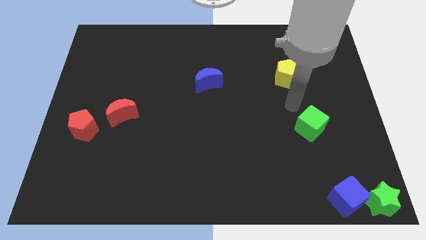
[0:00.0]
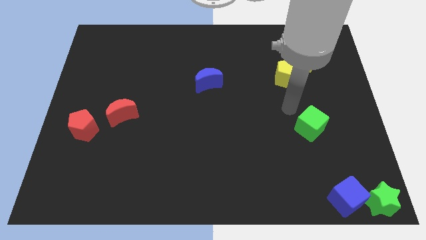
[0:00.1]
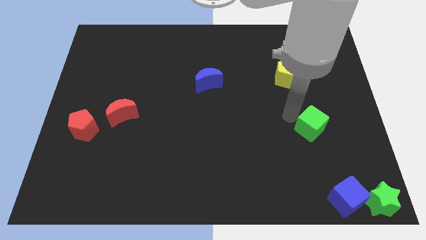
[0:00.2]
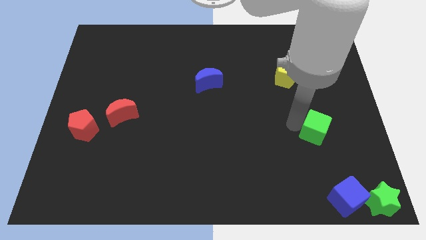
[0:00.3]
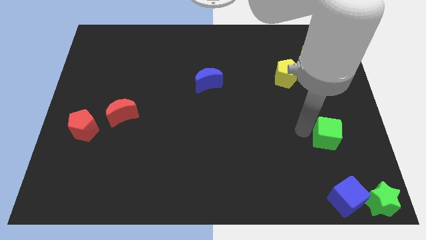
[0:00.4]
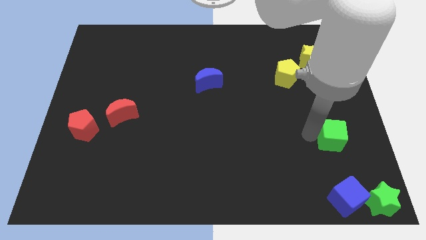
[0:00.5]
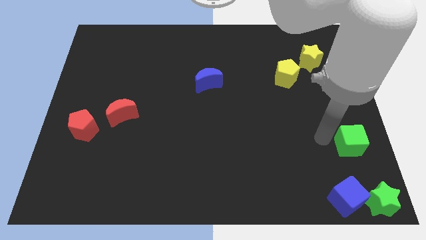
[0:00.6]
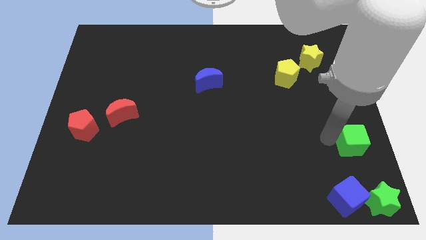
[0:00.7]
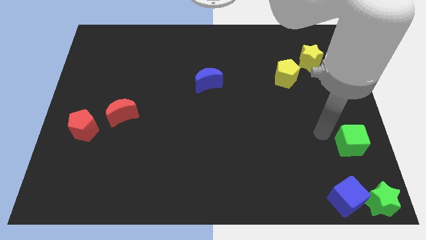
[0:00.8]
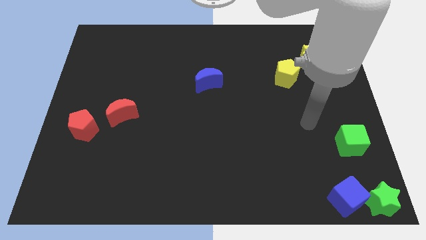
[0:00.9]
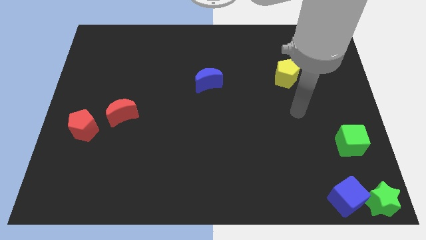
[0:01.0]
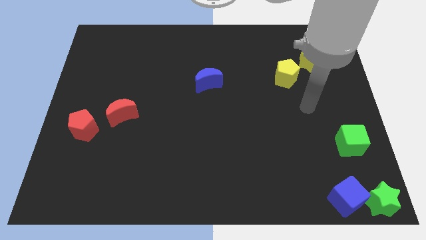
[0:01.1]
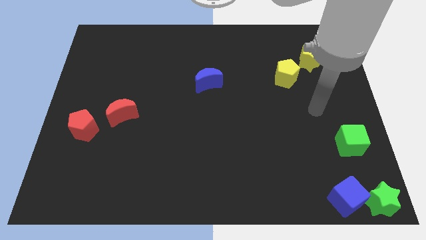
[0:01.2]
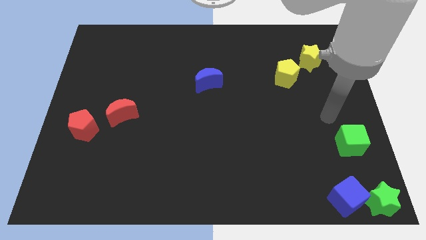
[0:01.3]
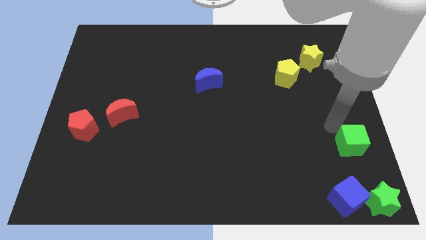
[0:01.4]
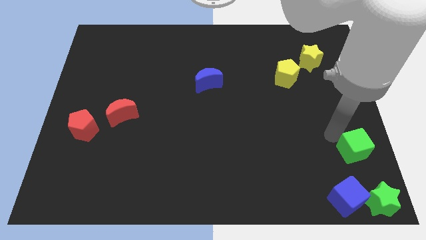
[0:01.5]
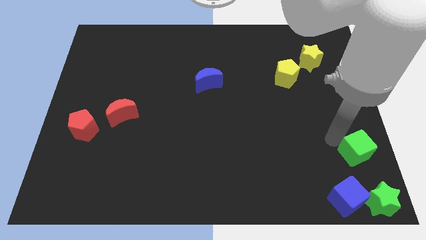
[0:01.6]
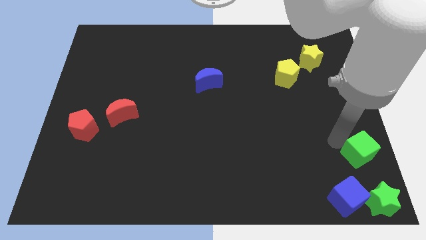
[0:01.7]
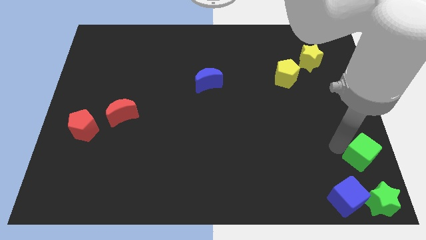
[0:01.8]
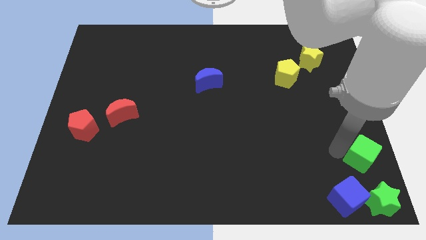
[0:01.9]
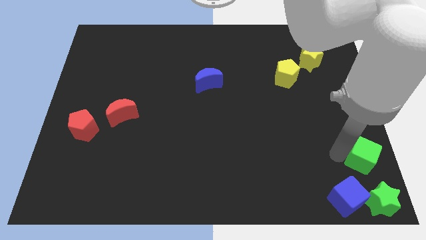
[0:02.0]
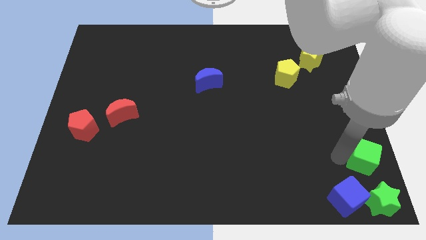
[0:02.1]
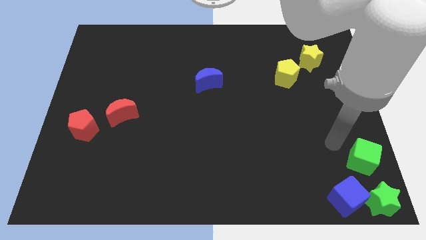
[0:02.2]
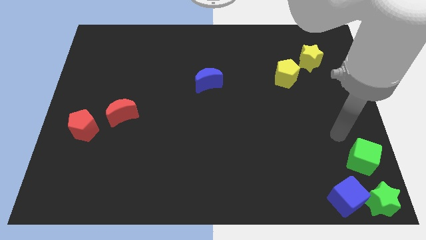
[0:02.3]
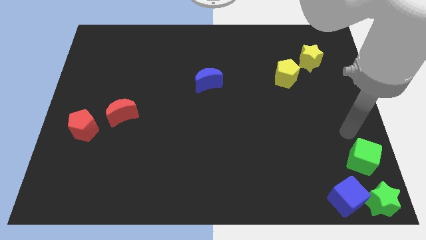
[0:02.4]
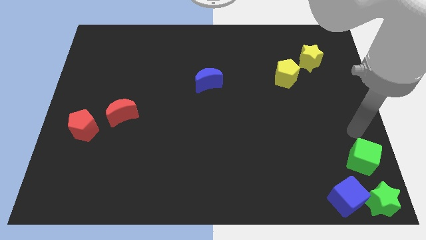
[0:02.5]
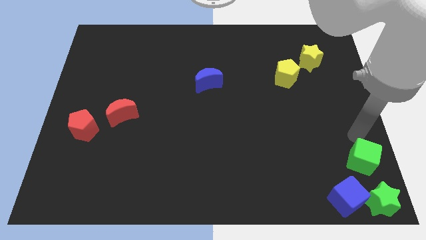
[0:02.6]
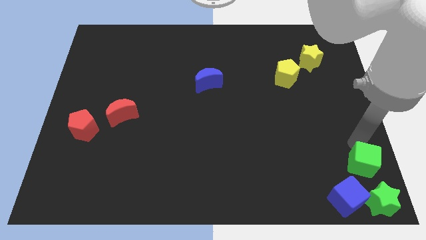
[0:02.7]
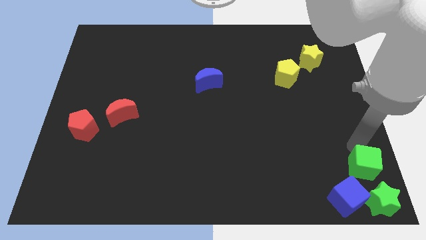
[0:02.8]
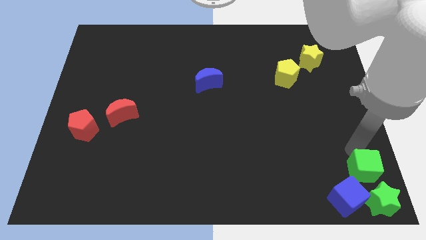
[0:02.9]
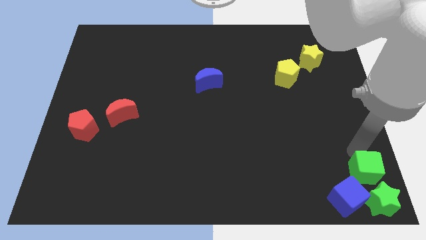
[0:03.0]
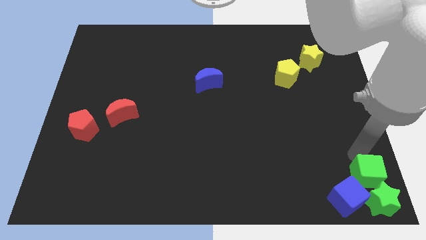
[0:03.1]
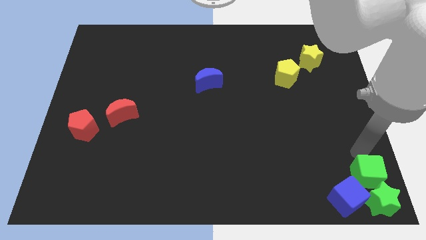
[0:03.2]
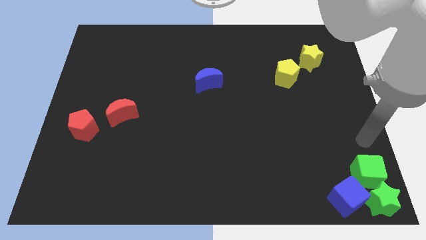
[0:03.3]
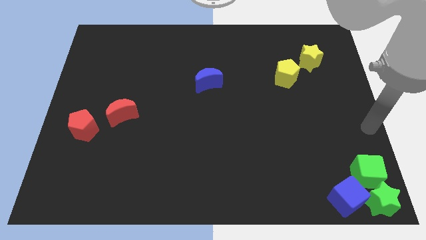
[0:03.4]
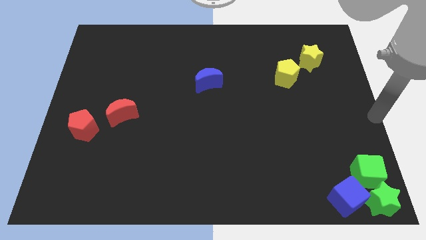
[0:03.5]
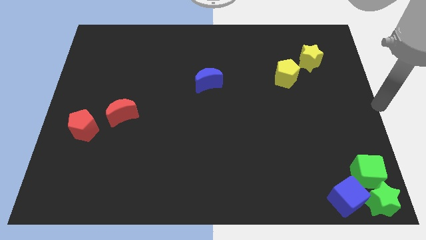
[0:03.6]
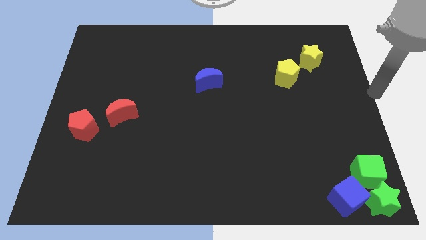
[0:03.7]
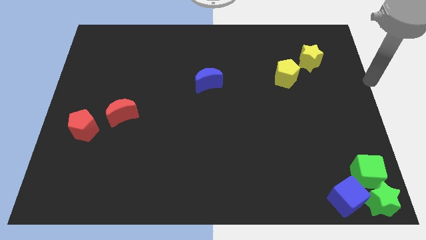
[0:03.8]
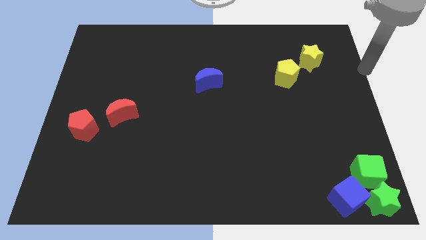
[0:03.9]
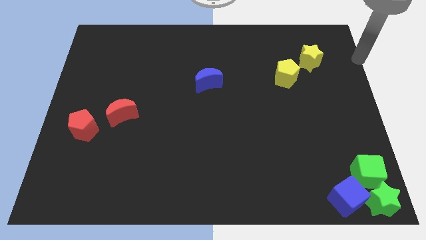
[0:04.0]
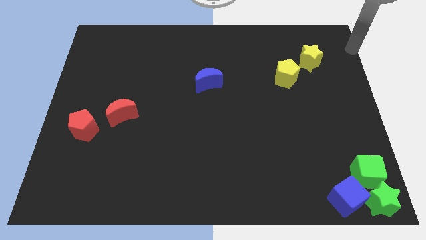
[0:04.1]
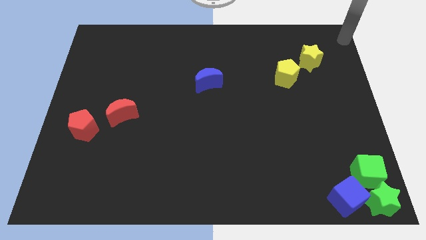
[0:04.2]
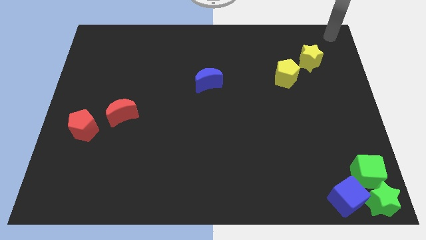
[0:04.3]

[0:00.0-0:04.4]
place the green cube on top of the blue cubegreen star

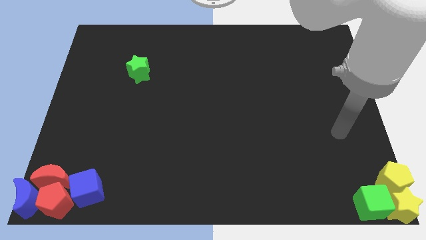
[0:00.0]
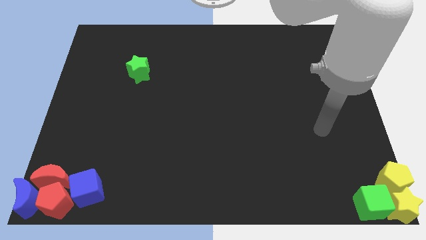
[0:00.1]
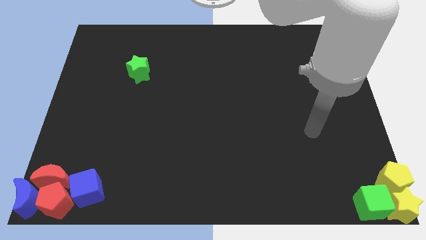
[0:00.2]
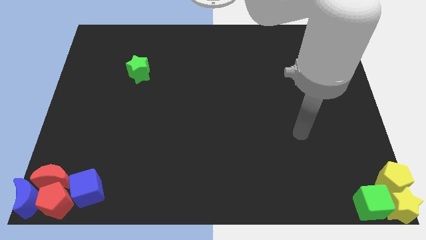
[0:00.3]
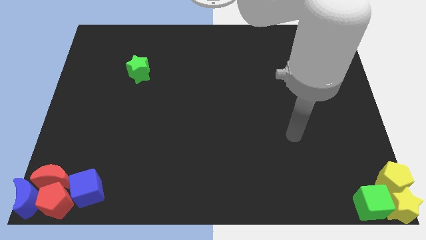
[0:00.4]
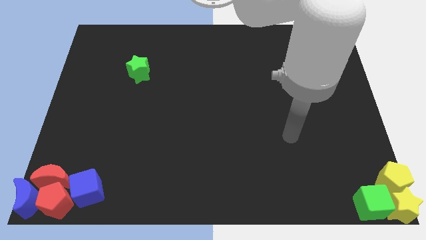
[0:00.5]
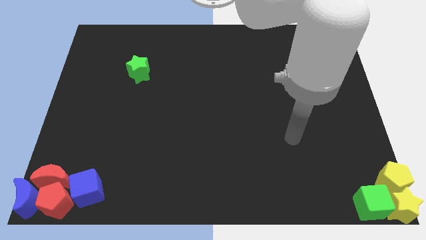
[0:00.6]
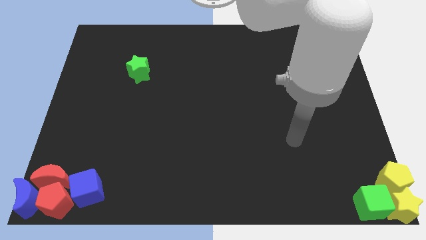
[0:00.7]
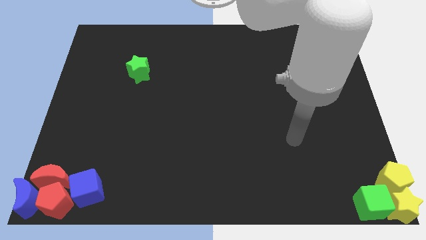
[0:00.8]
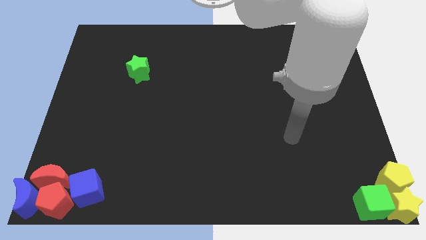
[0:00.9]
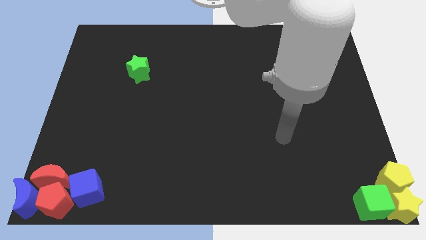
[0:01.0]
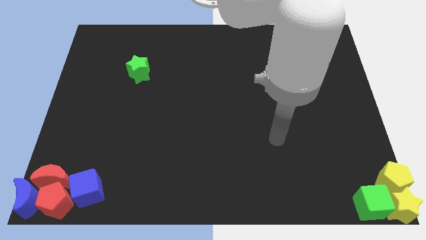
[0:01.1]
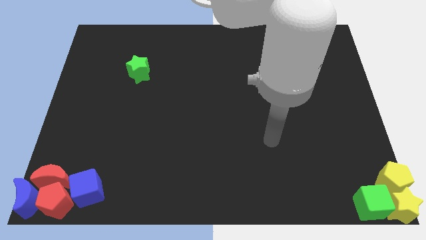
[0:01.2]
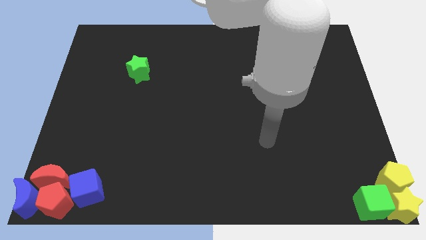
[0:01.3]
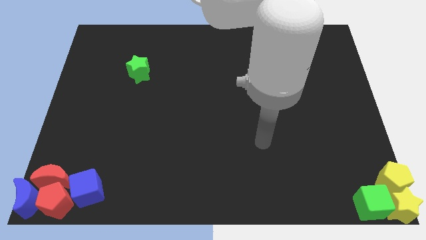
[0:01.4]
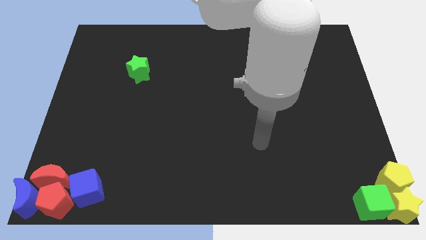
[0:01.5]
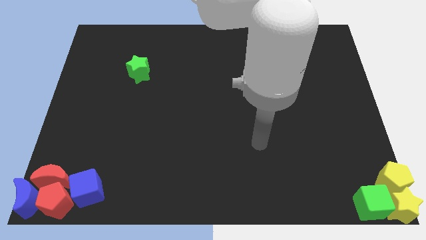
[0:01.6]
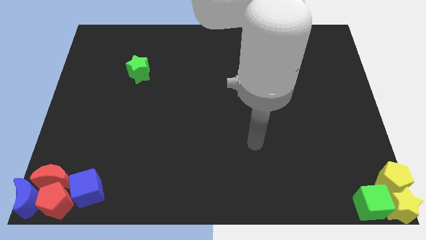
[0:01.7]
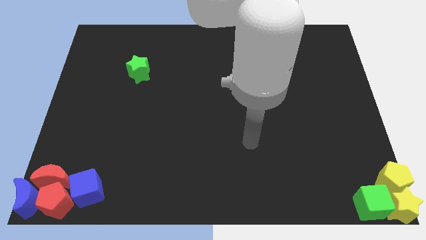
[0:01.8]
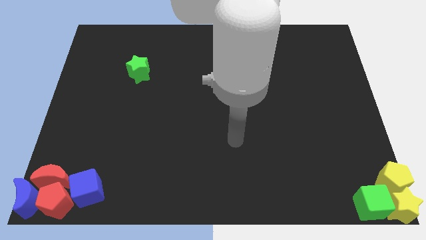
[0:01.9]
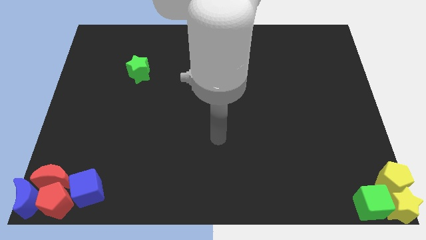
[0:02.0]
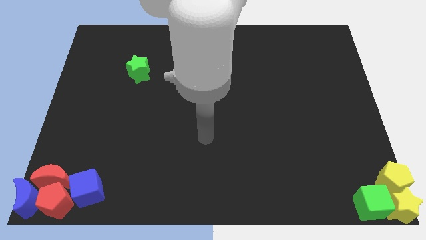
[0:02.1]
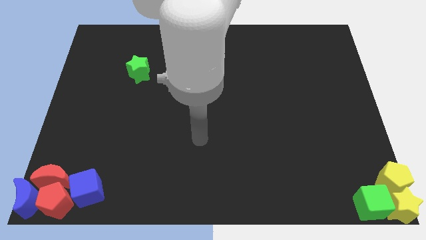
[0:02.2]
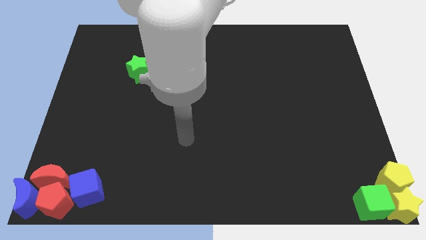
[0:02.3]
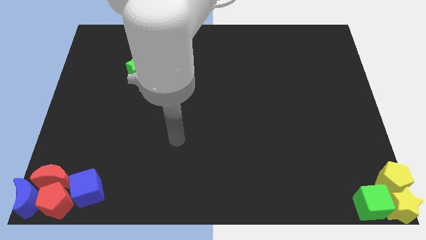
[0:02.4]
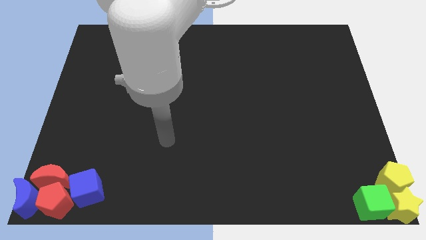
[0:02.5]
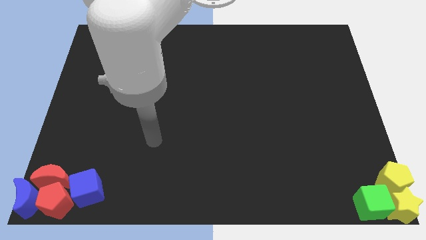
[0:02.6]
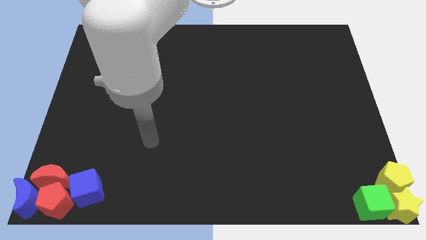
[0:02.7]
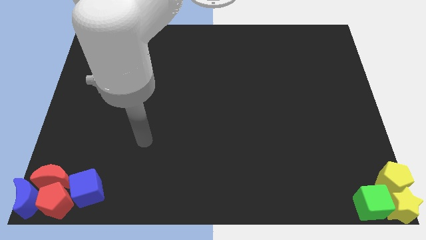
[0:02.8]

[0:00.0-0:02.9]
move the arm towards the left of the board

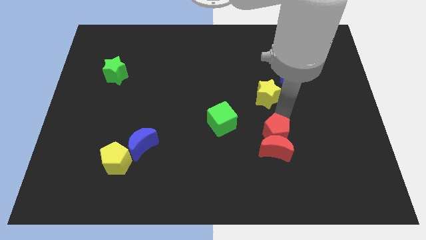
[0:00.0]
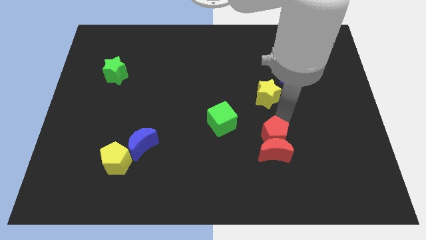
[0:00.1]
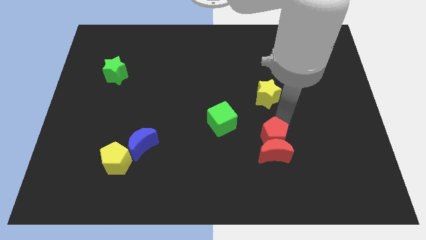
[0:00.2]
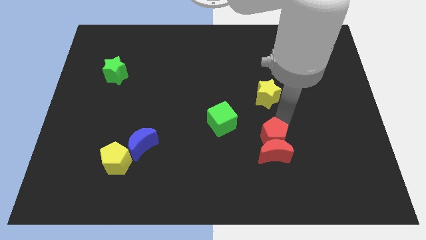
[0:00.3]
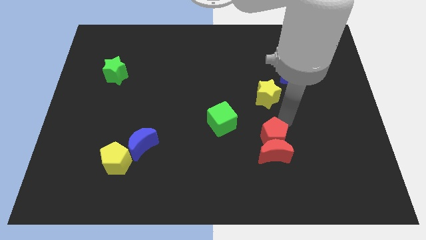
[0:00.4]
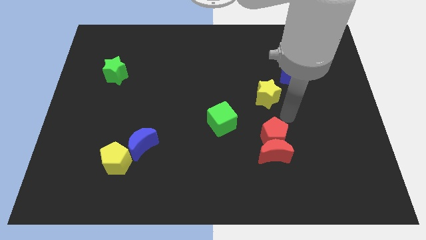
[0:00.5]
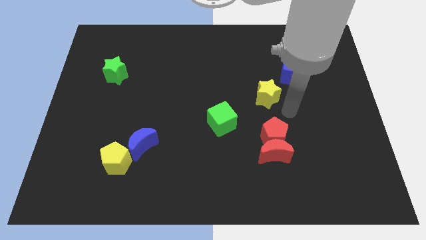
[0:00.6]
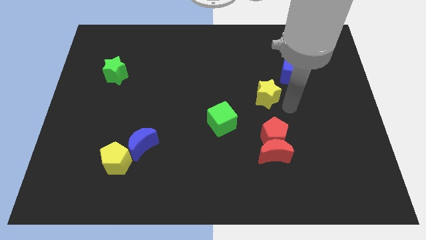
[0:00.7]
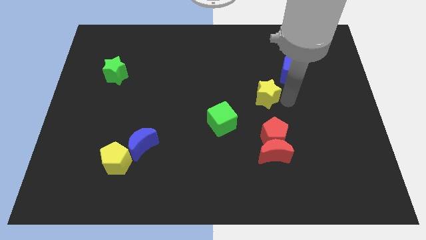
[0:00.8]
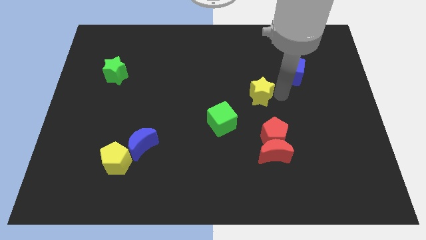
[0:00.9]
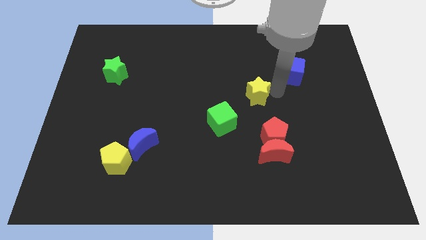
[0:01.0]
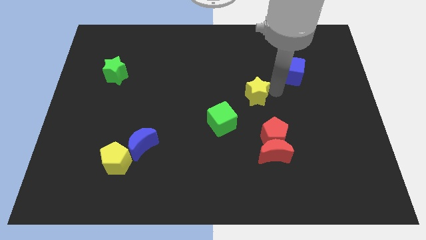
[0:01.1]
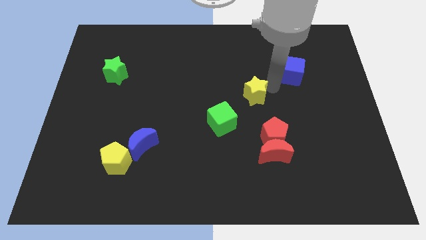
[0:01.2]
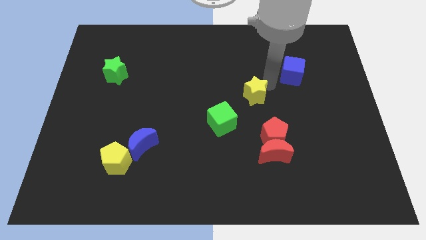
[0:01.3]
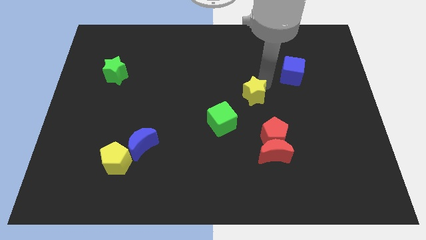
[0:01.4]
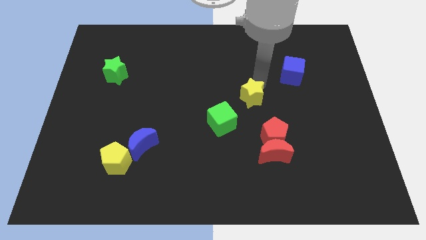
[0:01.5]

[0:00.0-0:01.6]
drag the arm towards the top of the yellow star

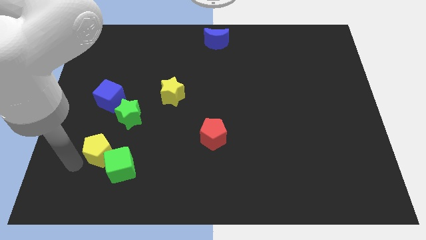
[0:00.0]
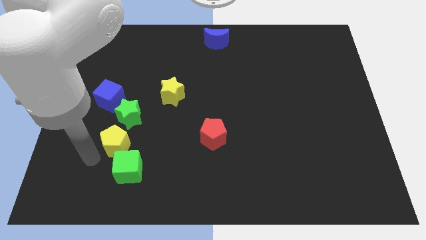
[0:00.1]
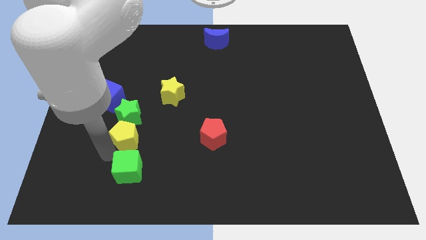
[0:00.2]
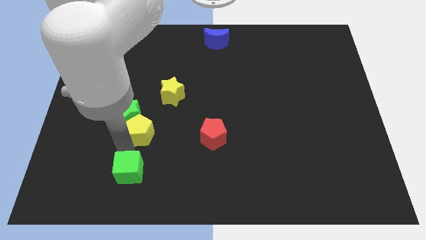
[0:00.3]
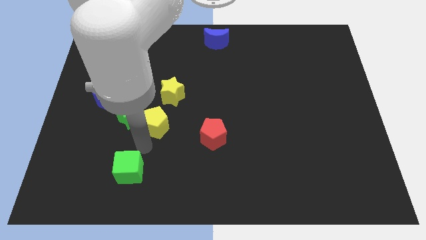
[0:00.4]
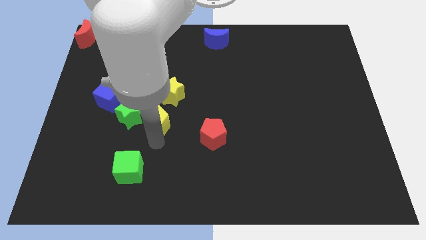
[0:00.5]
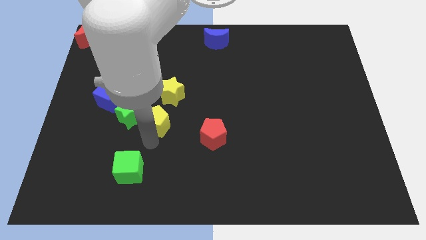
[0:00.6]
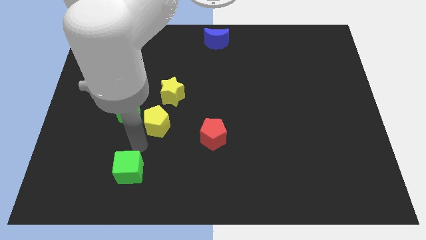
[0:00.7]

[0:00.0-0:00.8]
push the yellow pentagon to the right of the green star
